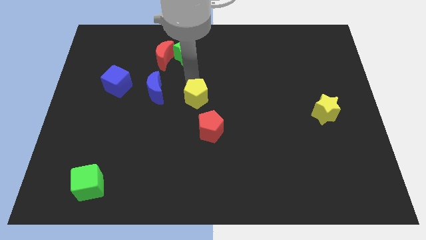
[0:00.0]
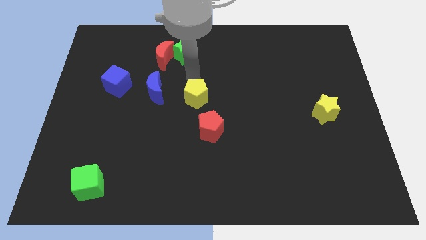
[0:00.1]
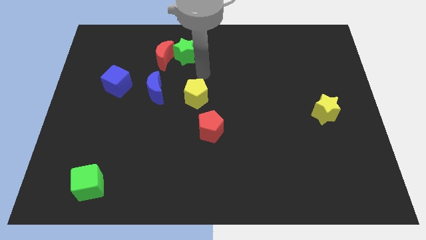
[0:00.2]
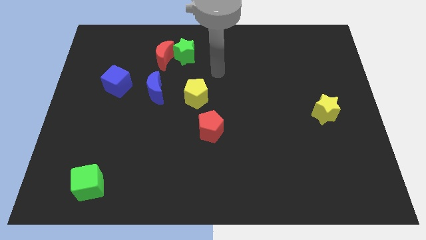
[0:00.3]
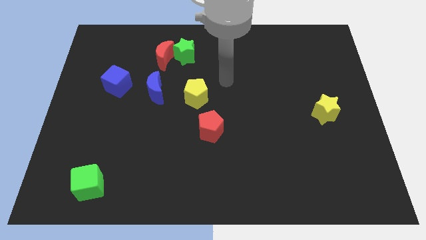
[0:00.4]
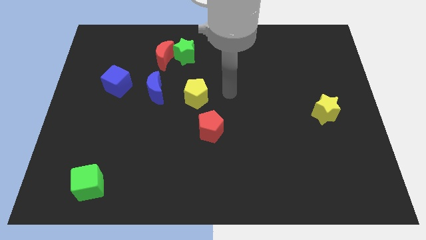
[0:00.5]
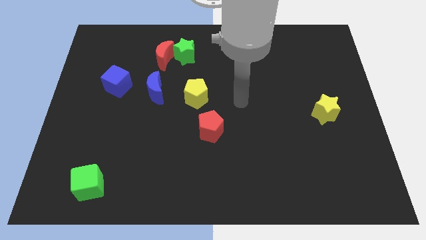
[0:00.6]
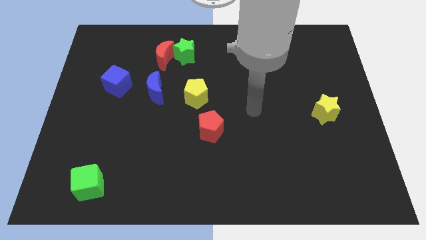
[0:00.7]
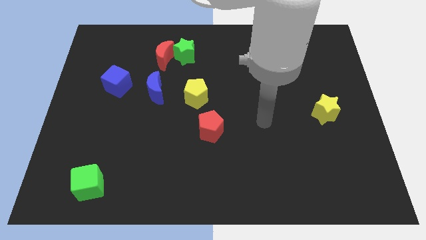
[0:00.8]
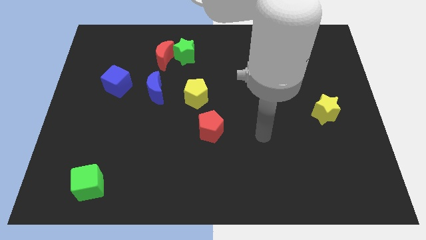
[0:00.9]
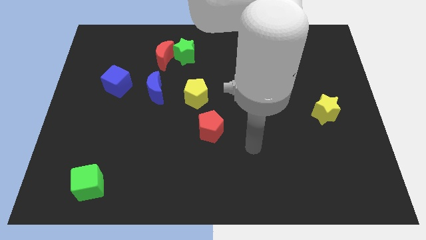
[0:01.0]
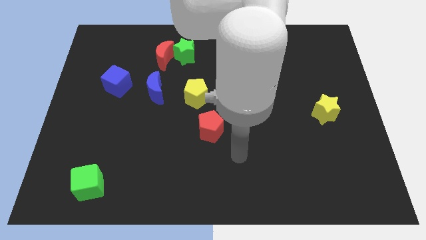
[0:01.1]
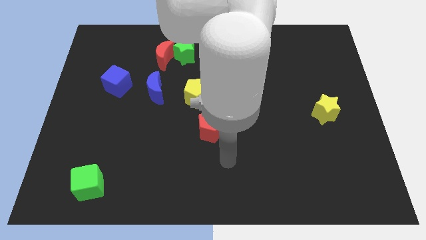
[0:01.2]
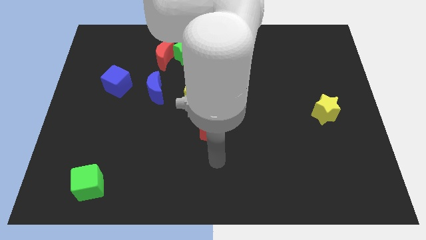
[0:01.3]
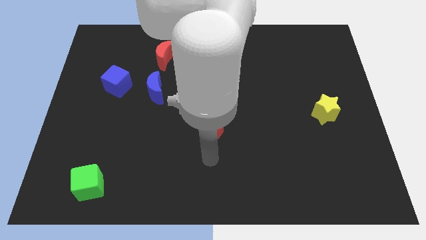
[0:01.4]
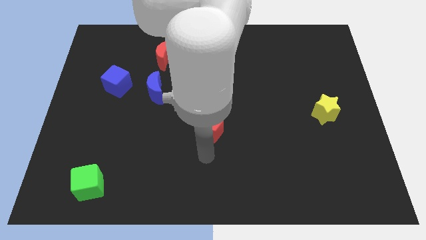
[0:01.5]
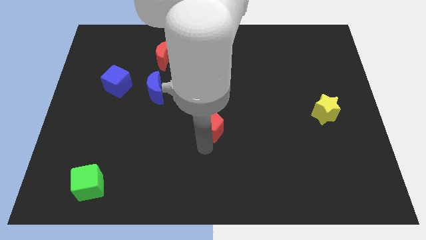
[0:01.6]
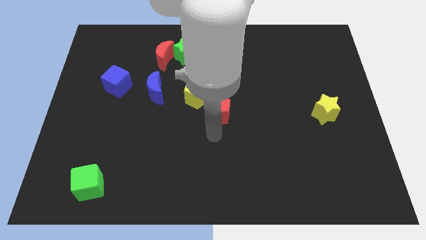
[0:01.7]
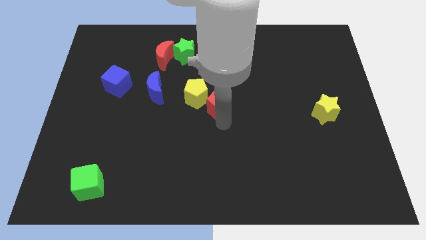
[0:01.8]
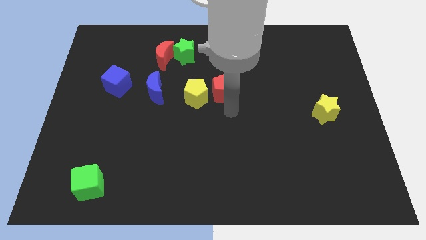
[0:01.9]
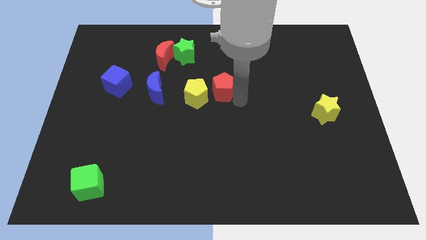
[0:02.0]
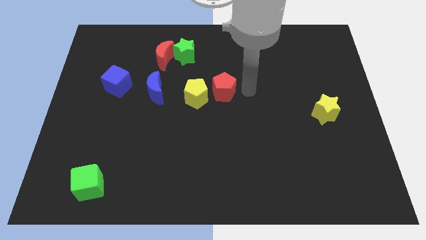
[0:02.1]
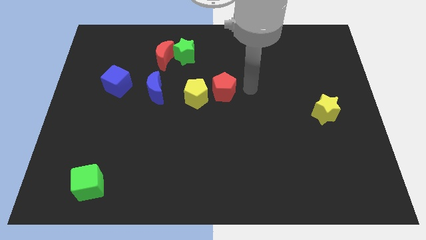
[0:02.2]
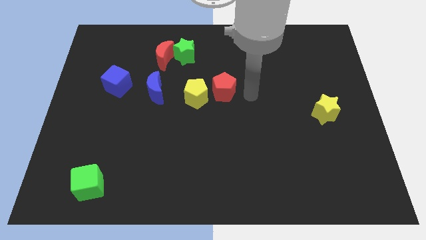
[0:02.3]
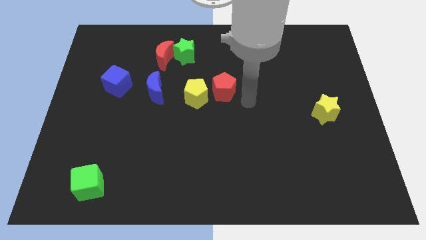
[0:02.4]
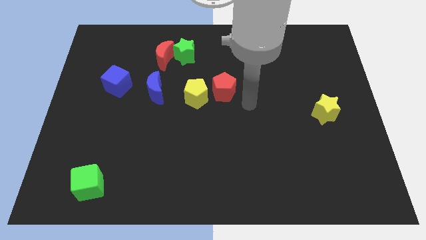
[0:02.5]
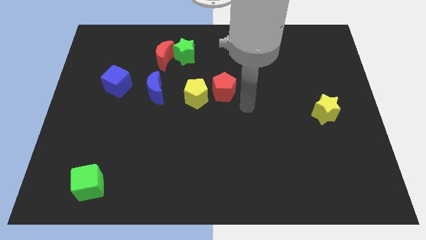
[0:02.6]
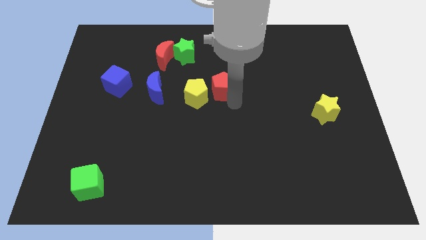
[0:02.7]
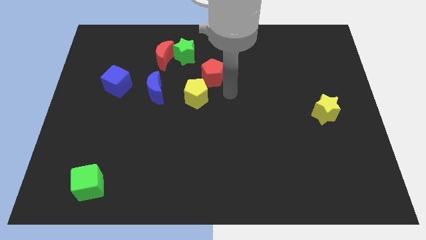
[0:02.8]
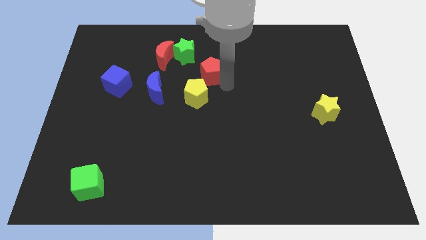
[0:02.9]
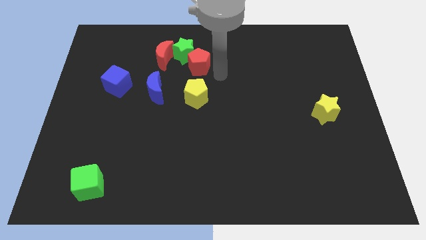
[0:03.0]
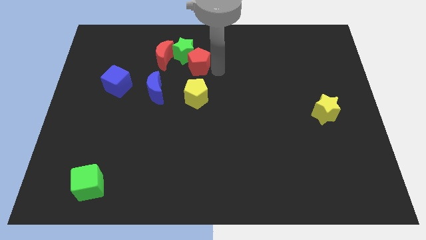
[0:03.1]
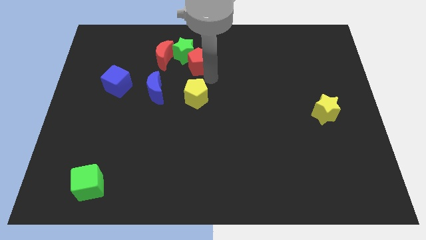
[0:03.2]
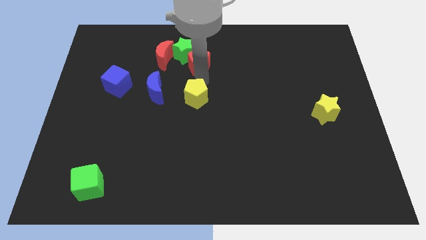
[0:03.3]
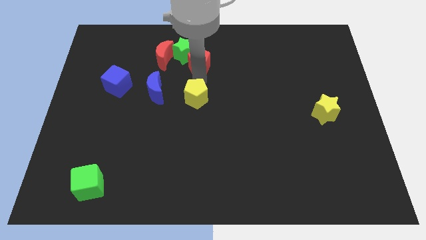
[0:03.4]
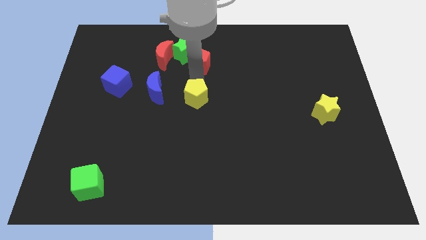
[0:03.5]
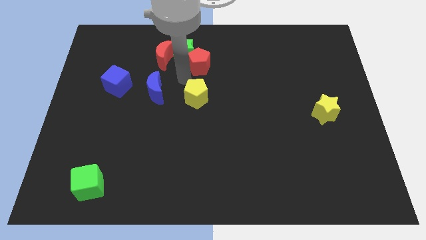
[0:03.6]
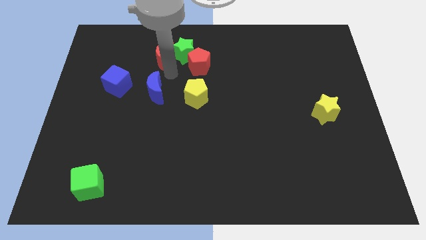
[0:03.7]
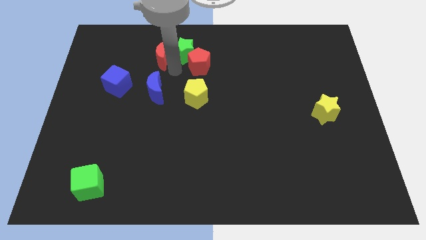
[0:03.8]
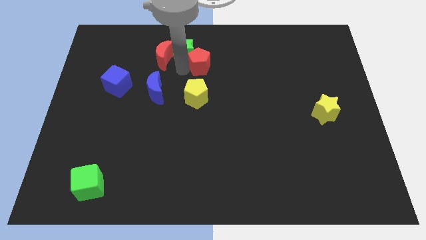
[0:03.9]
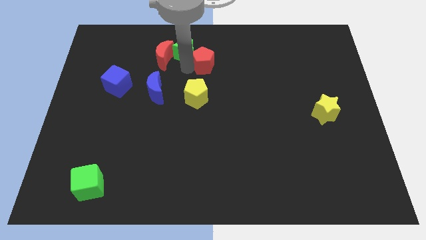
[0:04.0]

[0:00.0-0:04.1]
push the red pentagon into the green star

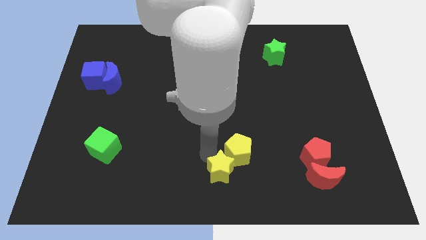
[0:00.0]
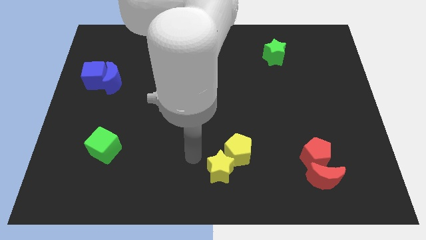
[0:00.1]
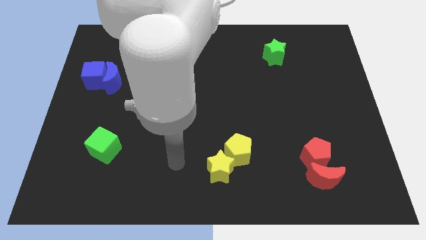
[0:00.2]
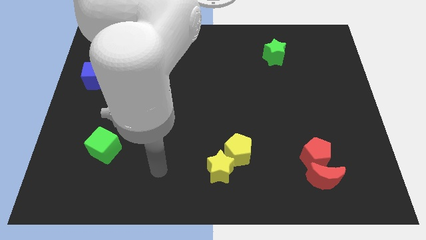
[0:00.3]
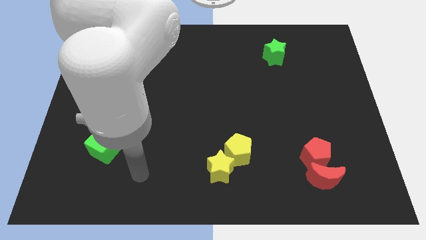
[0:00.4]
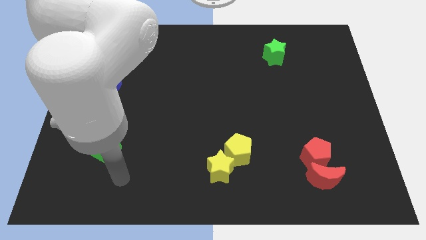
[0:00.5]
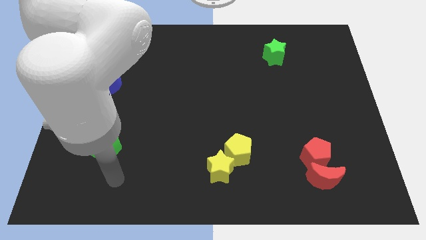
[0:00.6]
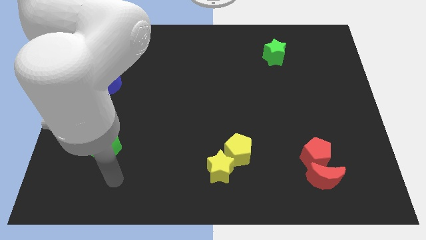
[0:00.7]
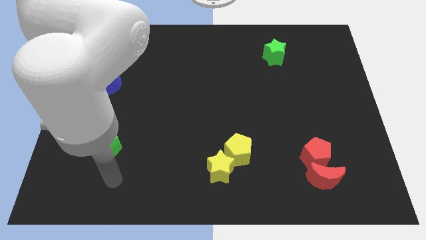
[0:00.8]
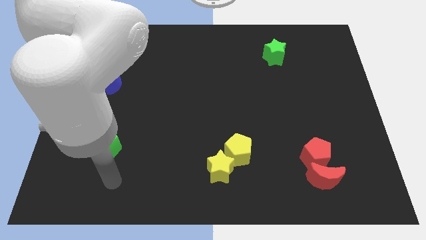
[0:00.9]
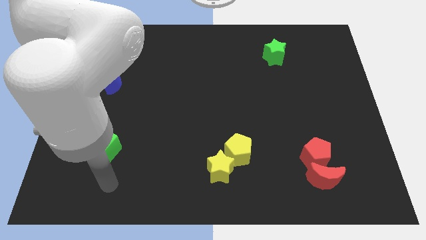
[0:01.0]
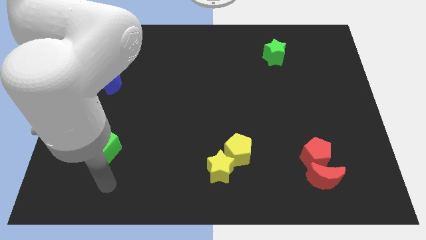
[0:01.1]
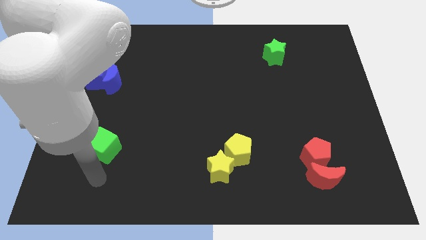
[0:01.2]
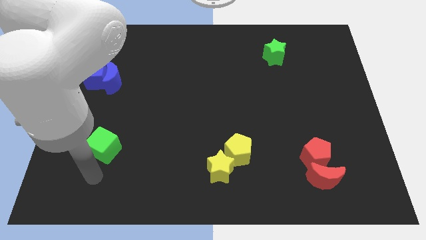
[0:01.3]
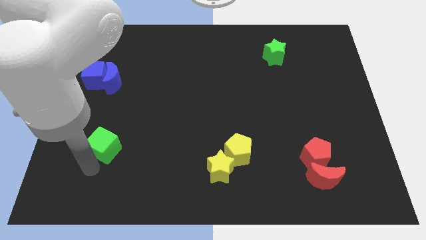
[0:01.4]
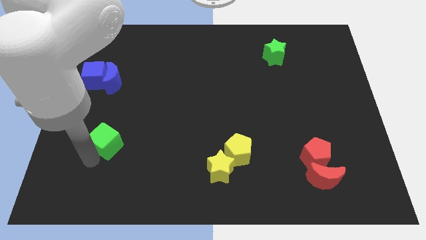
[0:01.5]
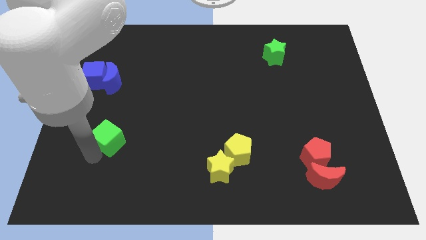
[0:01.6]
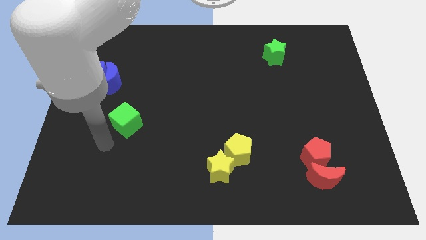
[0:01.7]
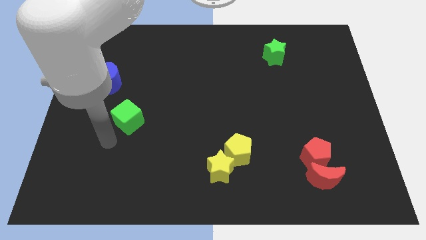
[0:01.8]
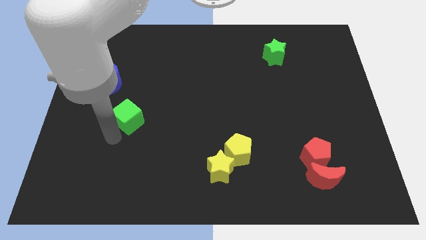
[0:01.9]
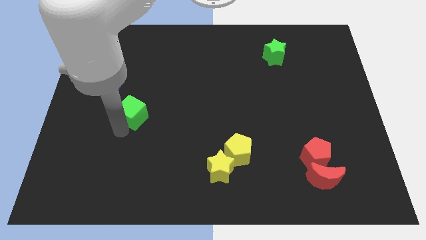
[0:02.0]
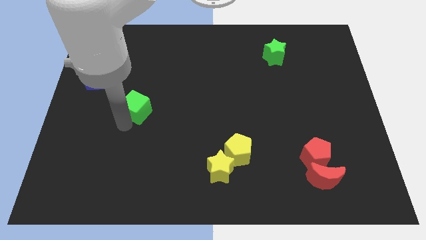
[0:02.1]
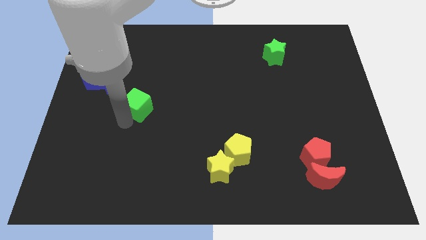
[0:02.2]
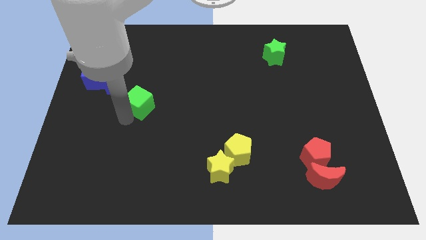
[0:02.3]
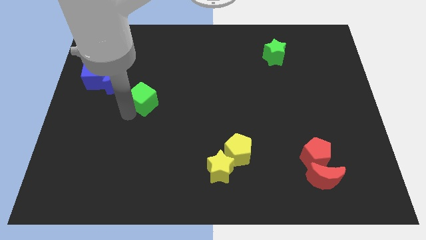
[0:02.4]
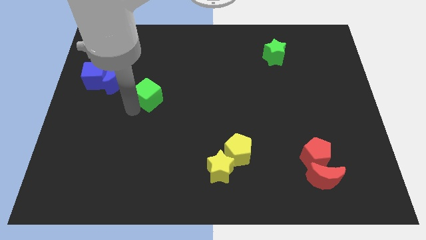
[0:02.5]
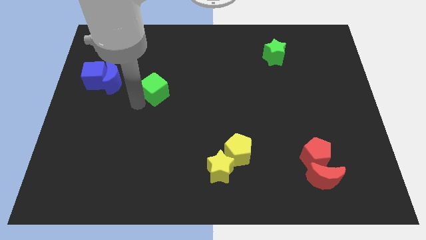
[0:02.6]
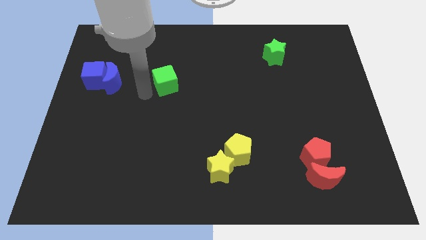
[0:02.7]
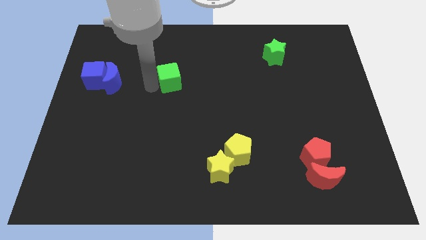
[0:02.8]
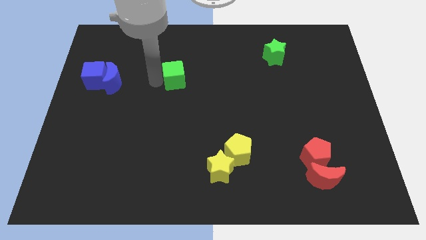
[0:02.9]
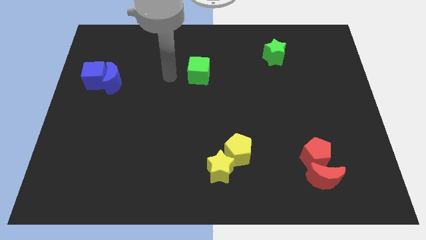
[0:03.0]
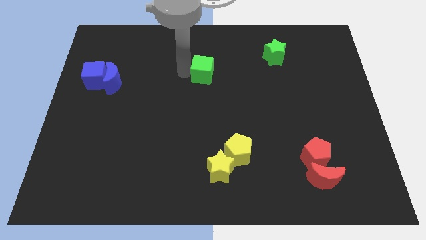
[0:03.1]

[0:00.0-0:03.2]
move the green cube towards the top center

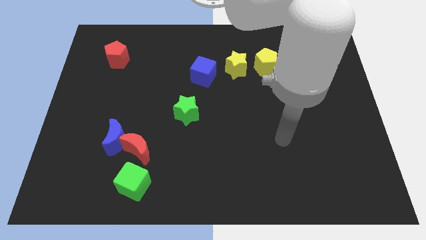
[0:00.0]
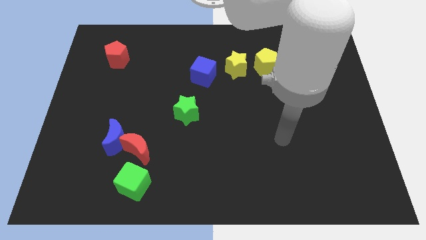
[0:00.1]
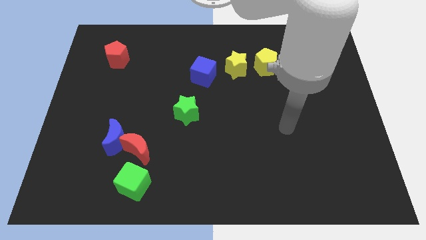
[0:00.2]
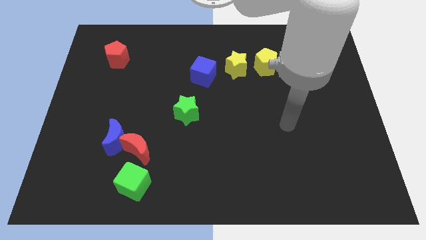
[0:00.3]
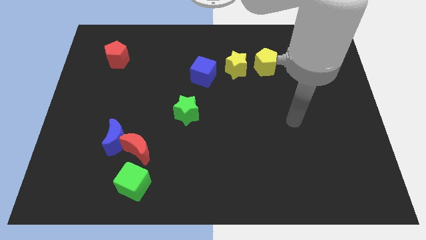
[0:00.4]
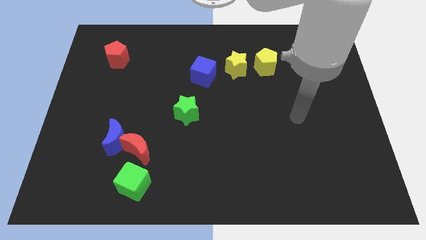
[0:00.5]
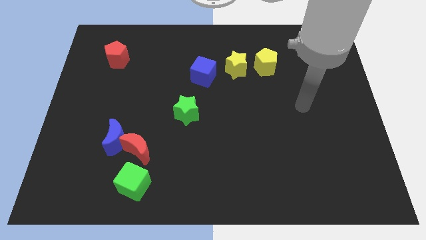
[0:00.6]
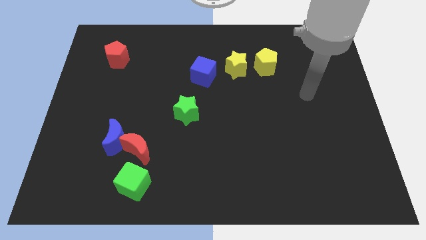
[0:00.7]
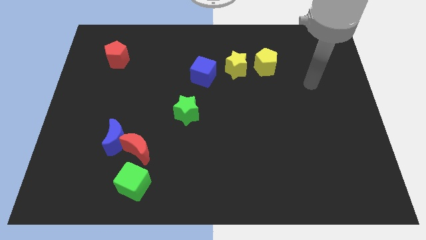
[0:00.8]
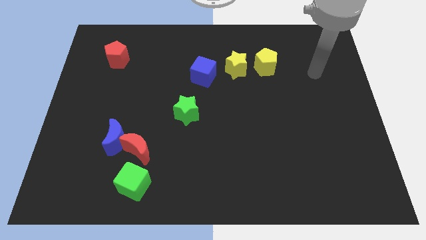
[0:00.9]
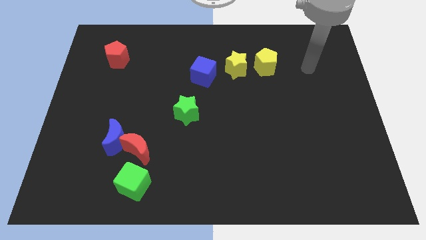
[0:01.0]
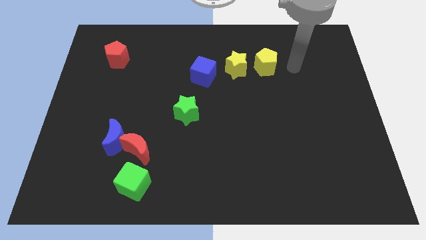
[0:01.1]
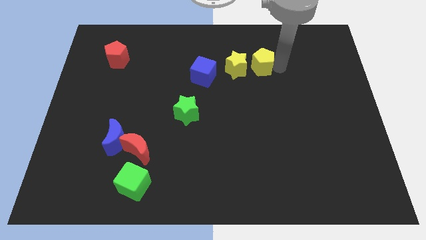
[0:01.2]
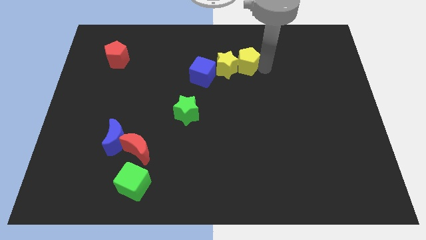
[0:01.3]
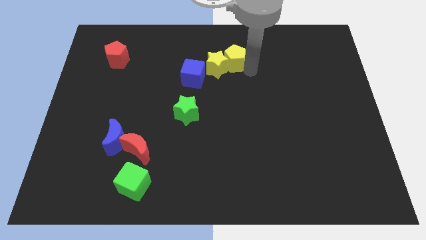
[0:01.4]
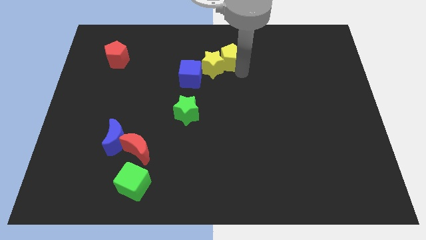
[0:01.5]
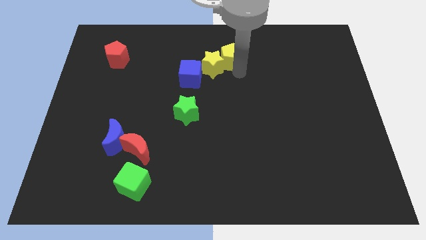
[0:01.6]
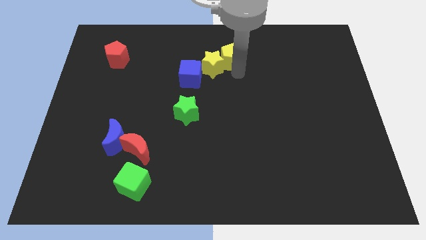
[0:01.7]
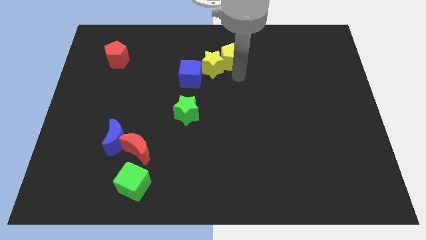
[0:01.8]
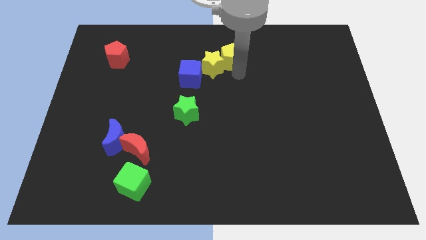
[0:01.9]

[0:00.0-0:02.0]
move the yellow pentagon into the yellow star
